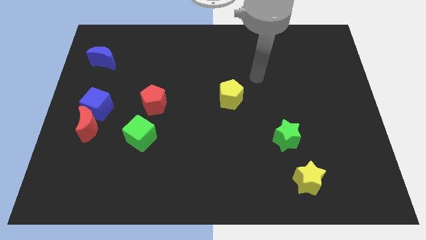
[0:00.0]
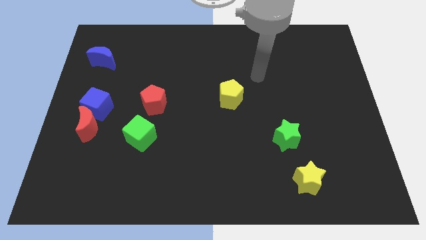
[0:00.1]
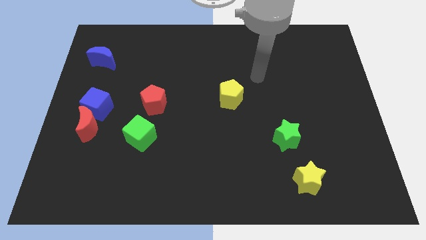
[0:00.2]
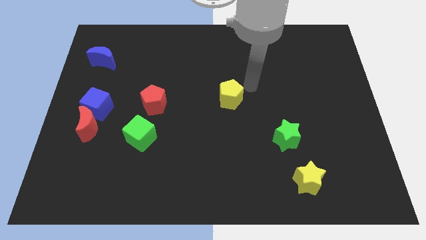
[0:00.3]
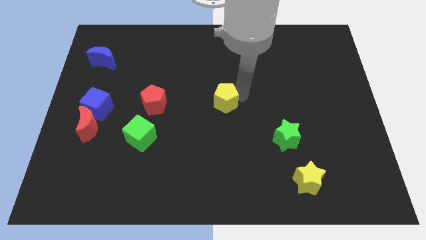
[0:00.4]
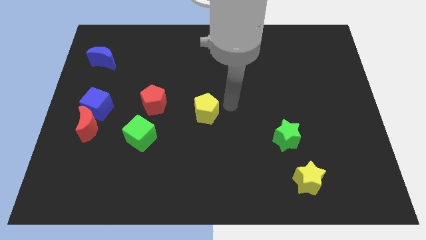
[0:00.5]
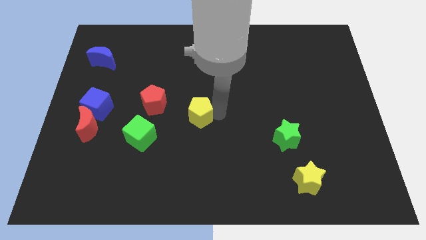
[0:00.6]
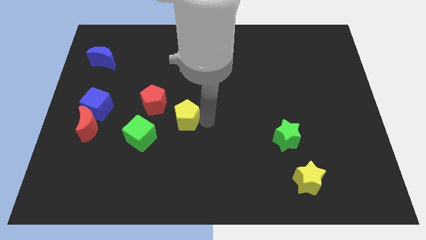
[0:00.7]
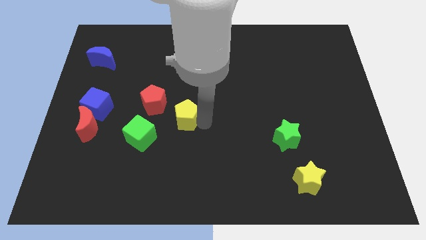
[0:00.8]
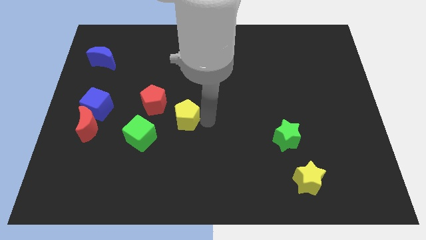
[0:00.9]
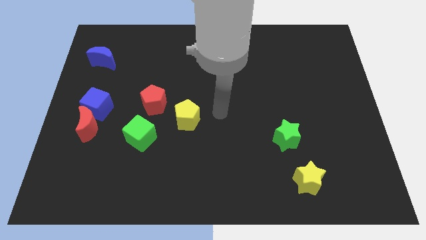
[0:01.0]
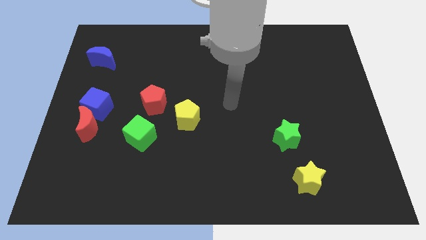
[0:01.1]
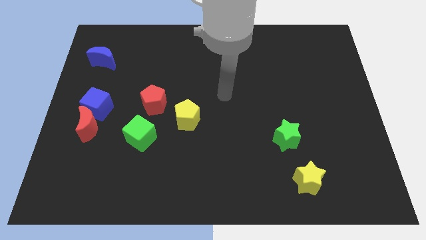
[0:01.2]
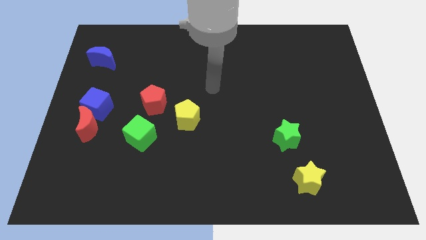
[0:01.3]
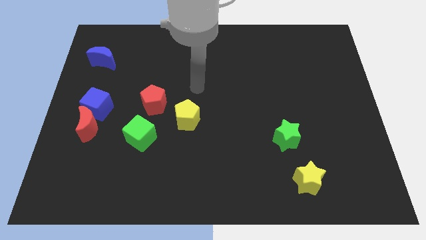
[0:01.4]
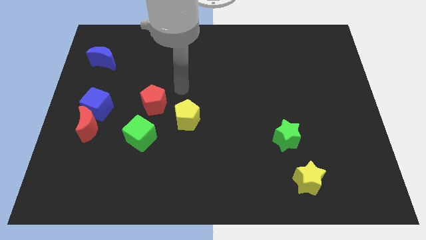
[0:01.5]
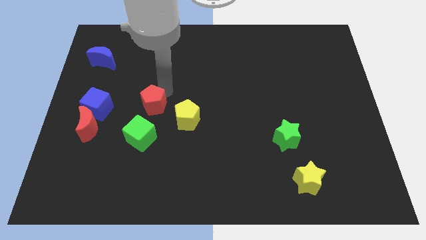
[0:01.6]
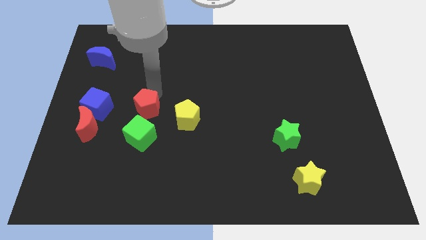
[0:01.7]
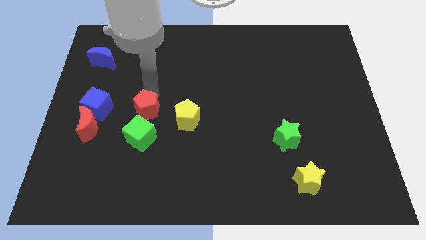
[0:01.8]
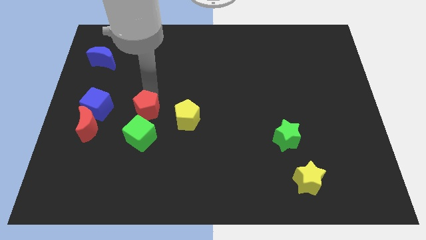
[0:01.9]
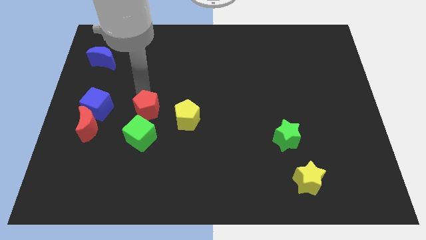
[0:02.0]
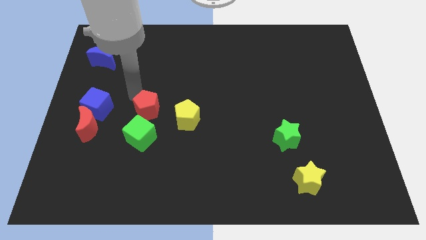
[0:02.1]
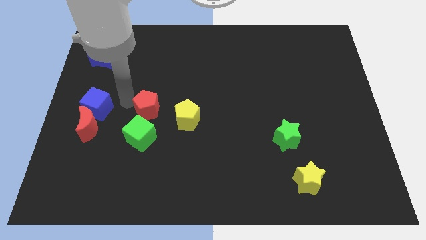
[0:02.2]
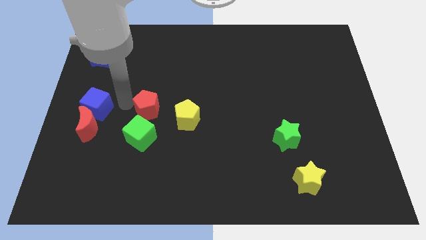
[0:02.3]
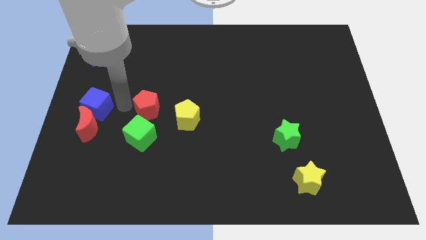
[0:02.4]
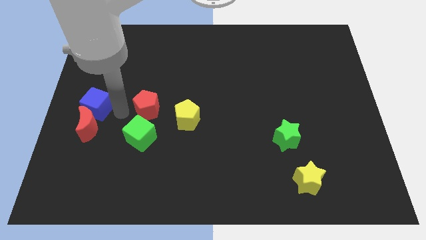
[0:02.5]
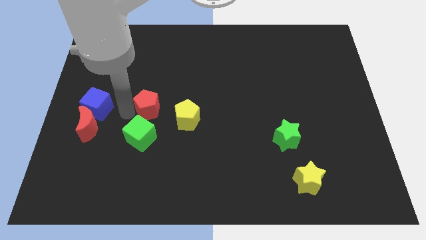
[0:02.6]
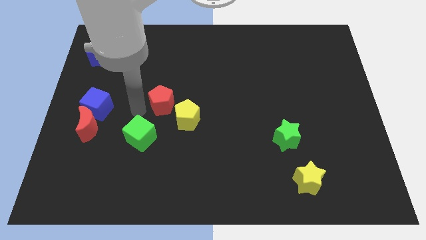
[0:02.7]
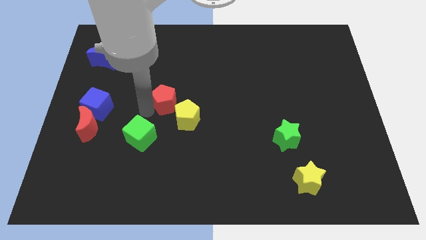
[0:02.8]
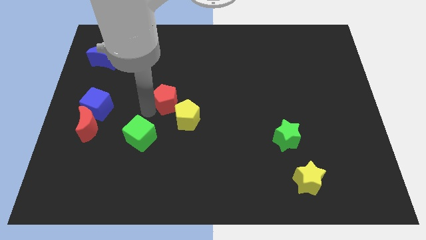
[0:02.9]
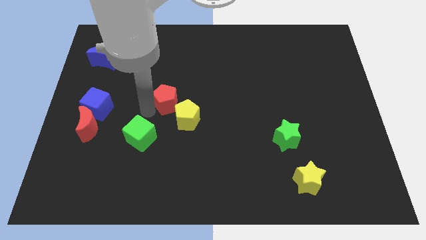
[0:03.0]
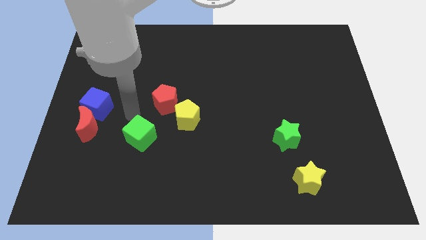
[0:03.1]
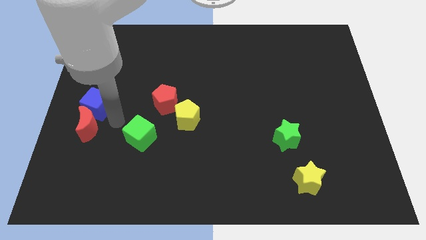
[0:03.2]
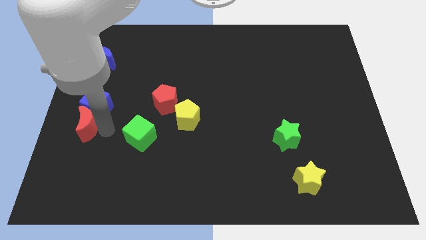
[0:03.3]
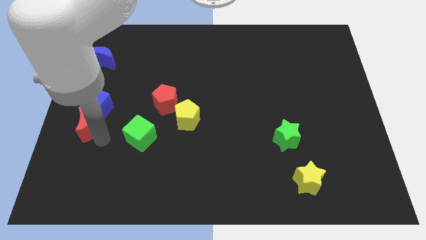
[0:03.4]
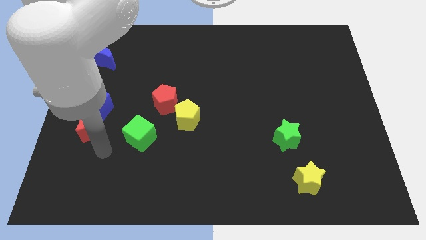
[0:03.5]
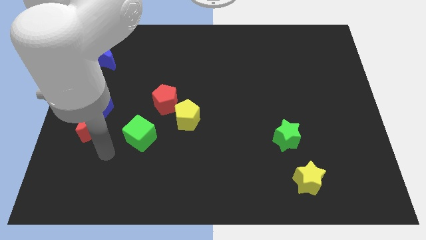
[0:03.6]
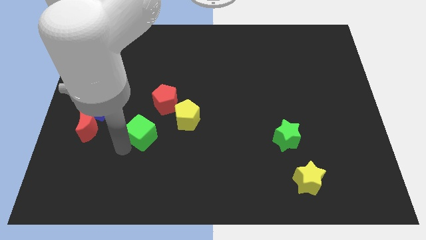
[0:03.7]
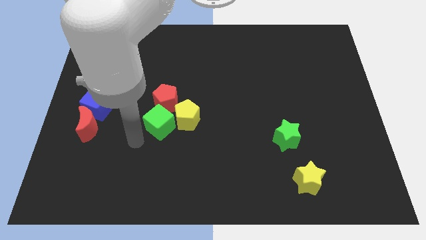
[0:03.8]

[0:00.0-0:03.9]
push the green cube the red and the yellow pentagon towards the center of the board

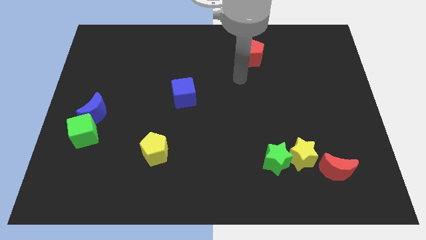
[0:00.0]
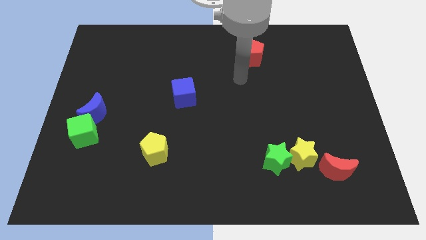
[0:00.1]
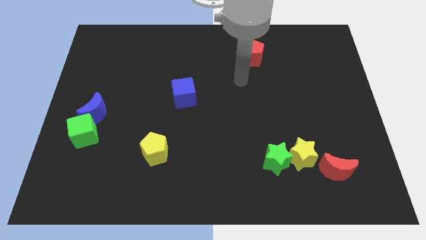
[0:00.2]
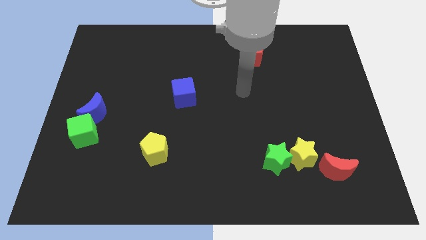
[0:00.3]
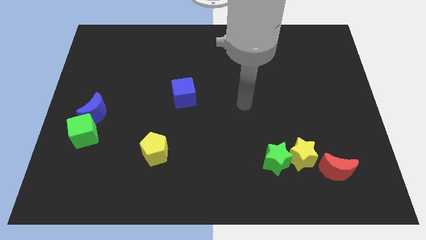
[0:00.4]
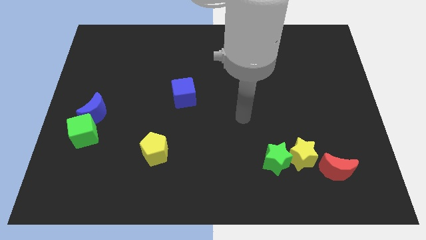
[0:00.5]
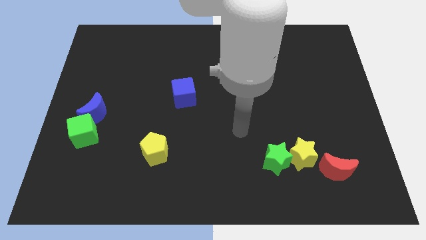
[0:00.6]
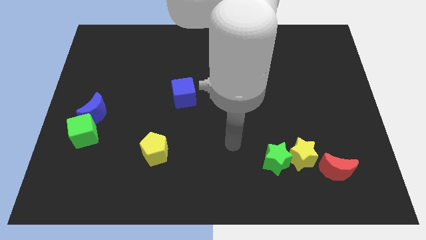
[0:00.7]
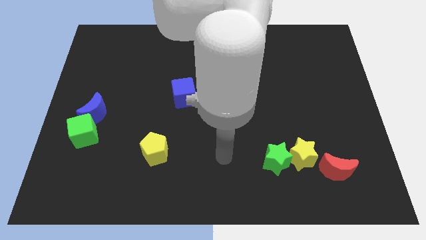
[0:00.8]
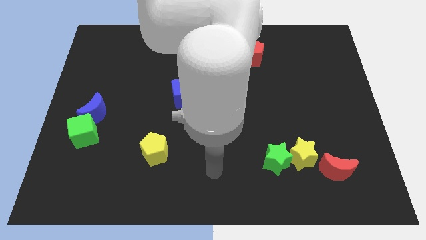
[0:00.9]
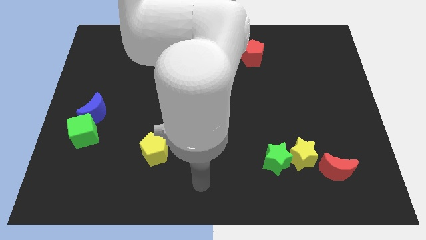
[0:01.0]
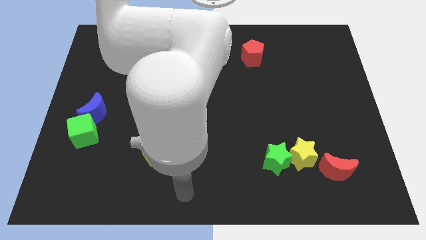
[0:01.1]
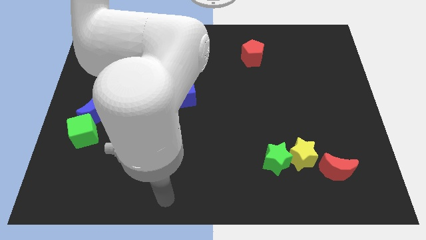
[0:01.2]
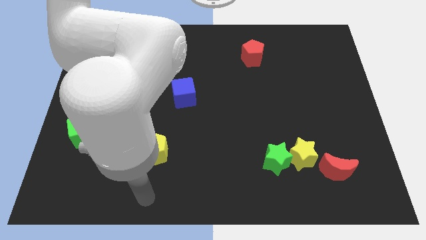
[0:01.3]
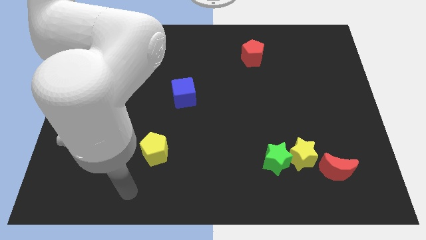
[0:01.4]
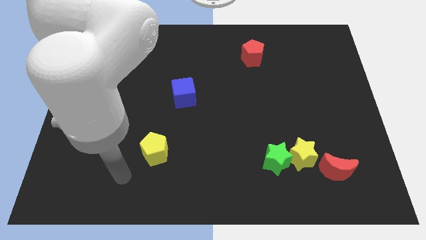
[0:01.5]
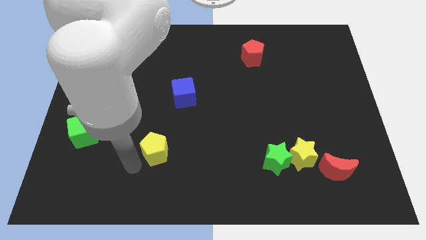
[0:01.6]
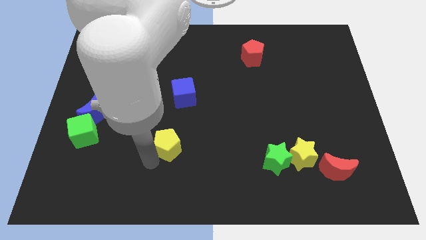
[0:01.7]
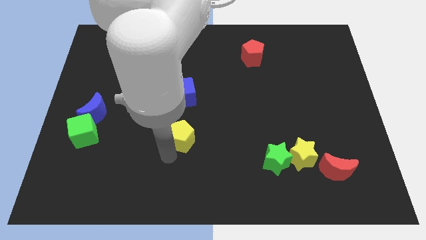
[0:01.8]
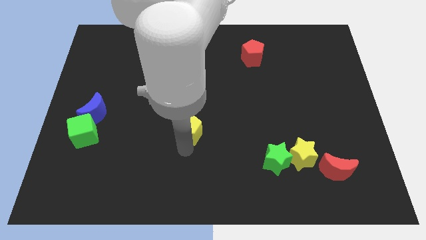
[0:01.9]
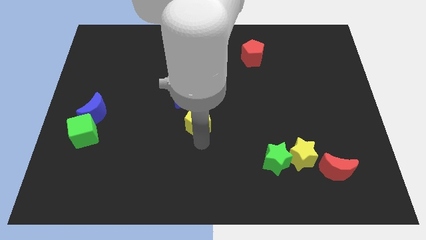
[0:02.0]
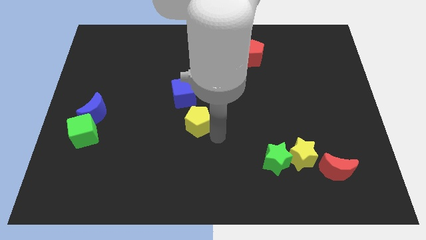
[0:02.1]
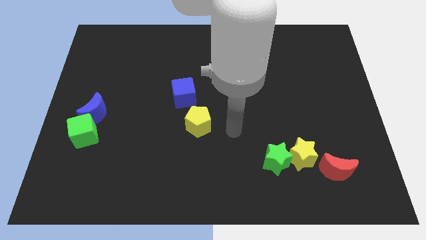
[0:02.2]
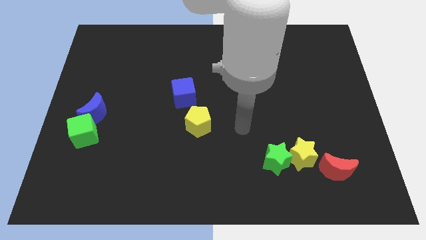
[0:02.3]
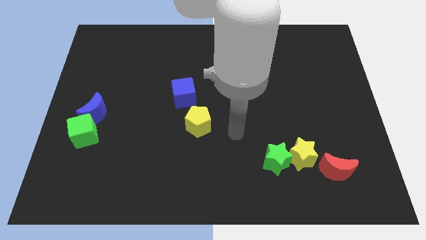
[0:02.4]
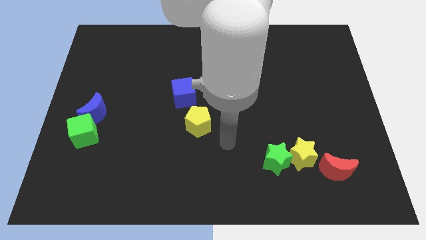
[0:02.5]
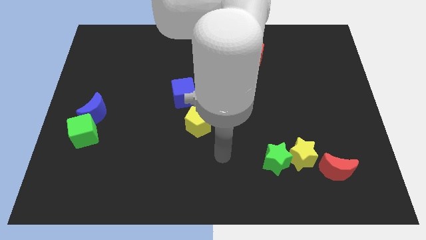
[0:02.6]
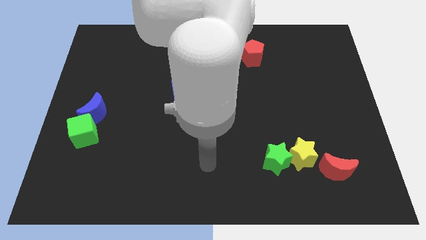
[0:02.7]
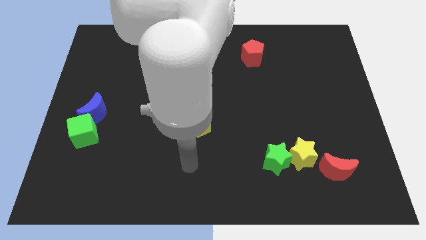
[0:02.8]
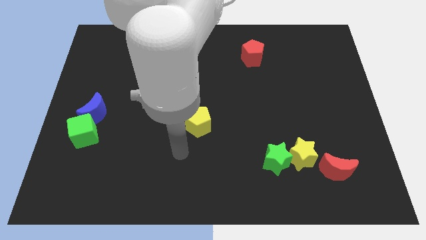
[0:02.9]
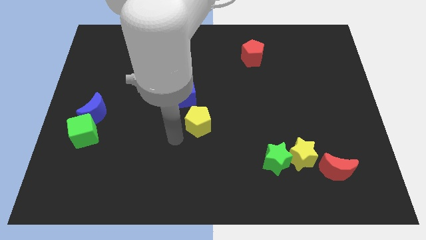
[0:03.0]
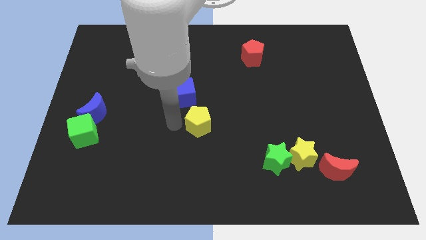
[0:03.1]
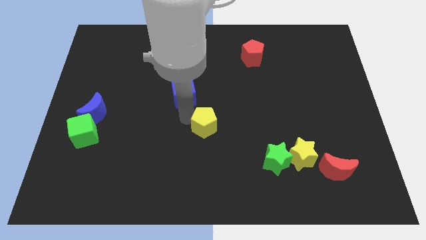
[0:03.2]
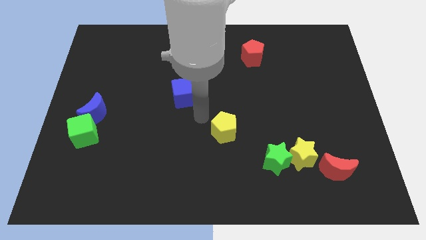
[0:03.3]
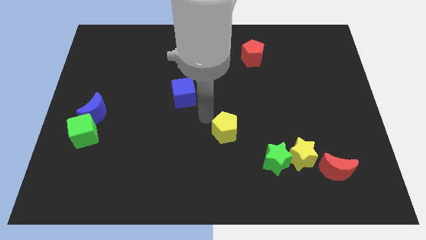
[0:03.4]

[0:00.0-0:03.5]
place the yellow pentagon diagonal to the green star

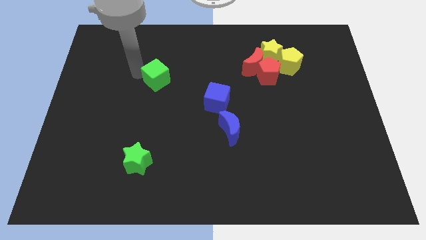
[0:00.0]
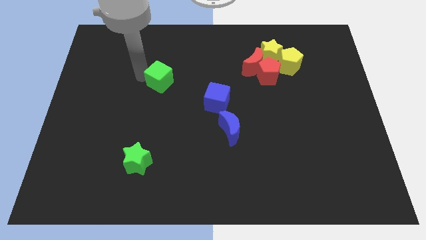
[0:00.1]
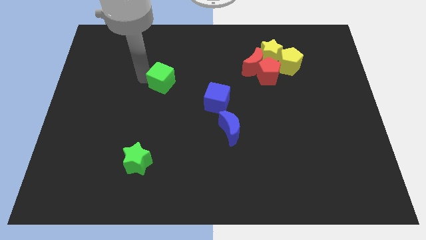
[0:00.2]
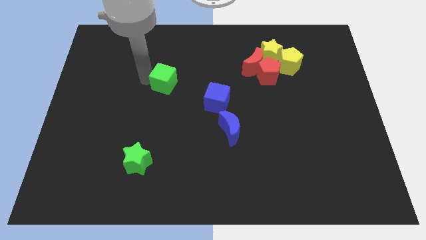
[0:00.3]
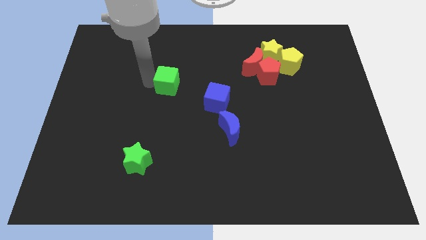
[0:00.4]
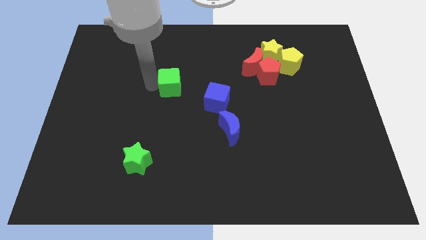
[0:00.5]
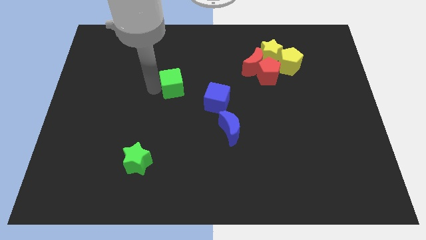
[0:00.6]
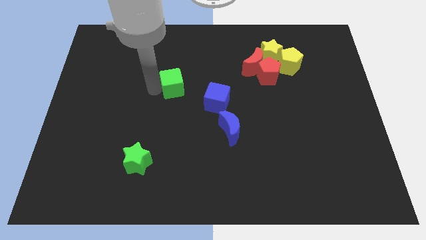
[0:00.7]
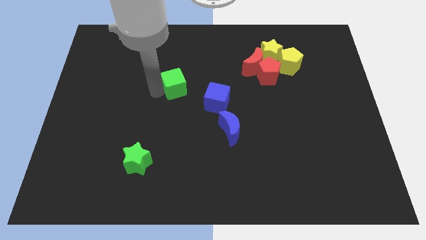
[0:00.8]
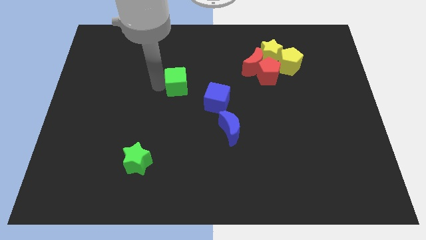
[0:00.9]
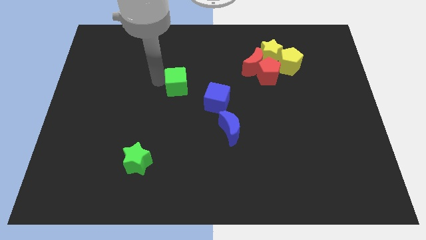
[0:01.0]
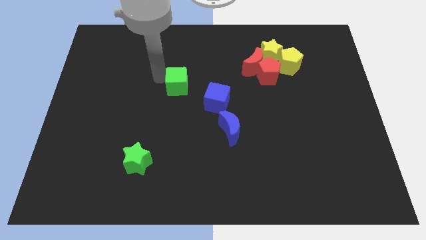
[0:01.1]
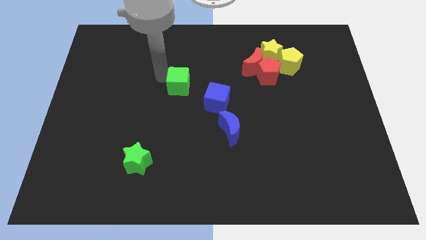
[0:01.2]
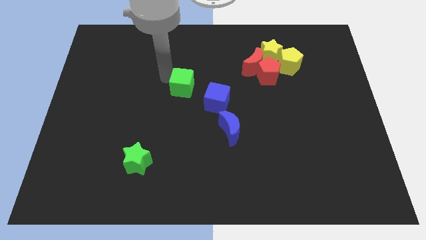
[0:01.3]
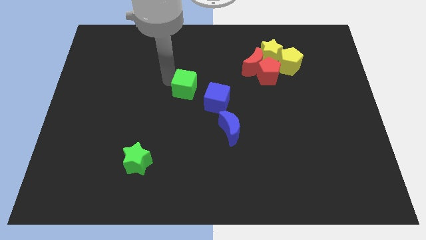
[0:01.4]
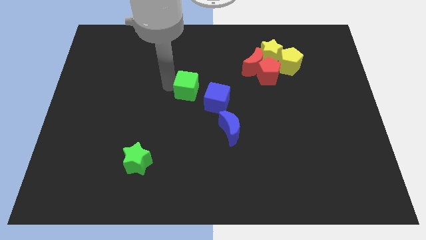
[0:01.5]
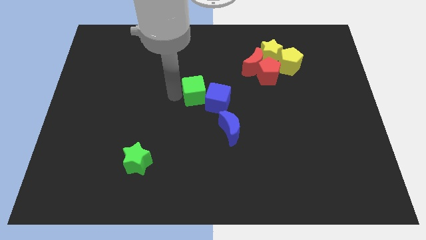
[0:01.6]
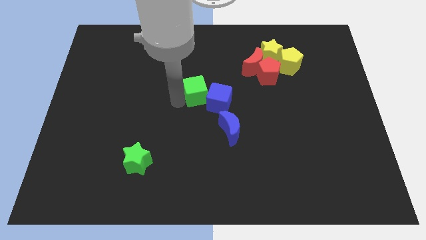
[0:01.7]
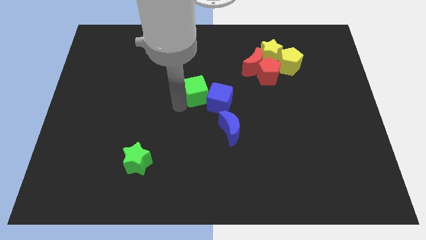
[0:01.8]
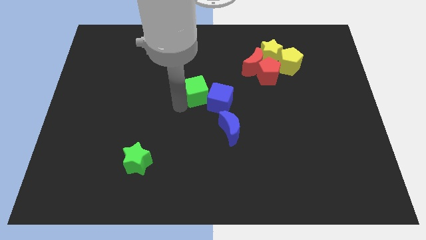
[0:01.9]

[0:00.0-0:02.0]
move the green cube to the left of the blue cube
